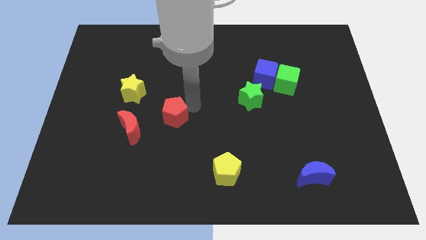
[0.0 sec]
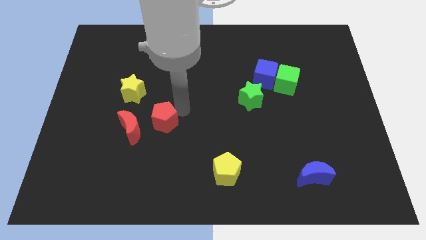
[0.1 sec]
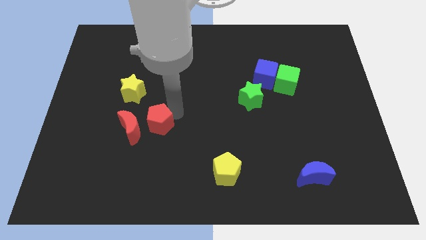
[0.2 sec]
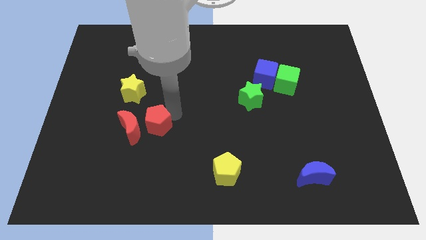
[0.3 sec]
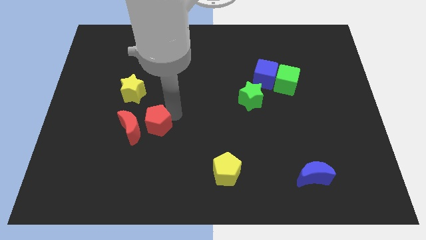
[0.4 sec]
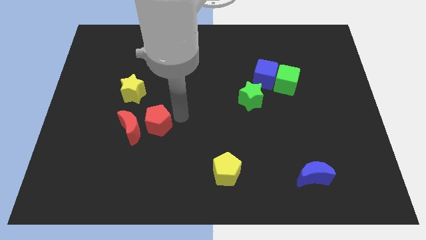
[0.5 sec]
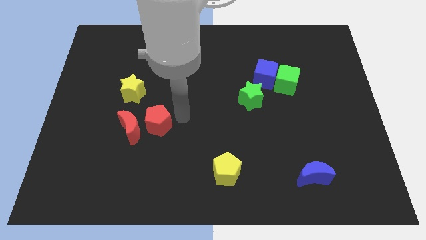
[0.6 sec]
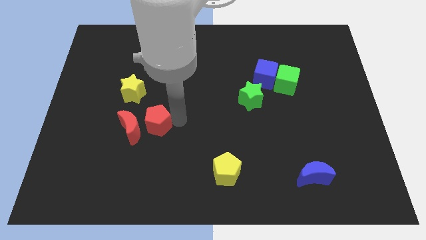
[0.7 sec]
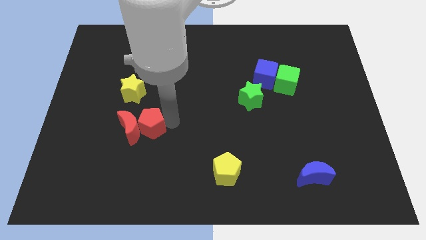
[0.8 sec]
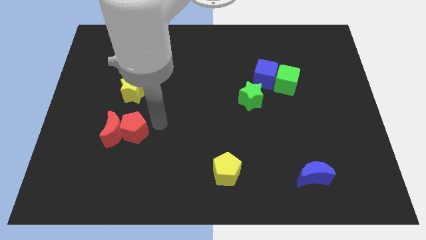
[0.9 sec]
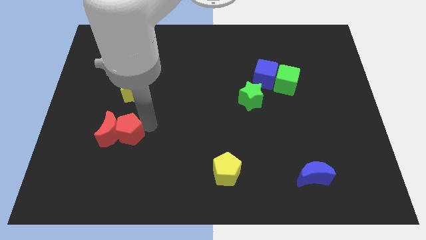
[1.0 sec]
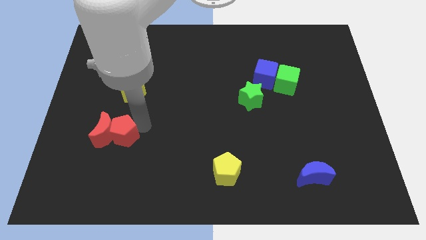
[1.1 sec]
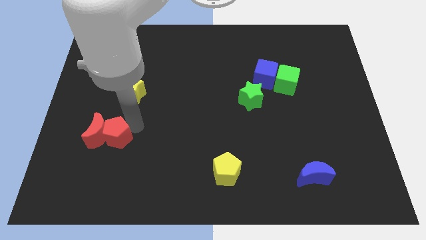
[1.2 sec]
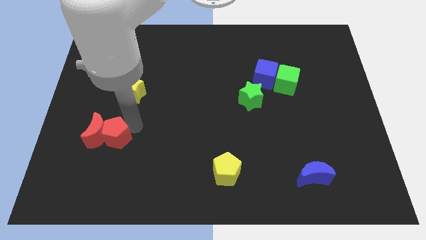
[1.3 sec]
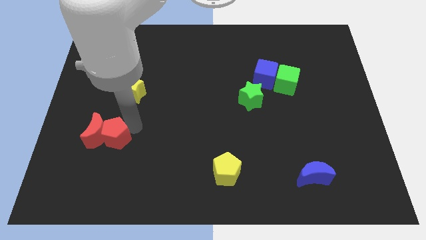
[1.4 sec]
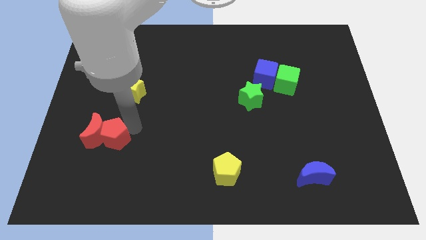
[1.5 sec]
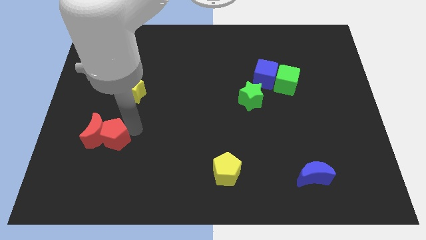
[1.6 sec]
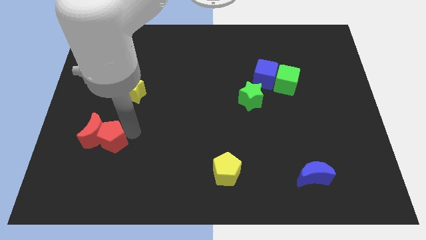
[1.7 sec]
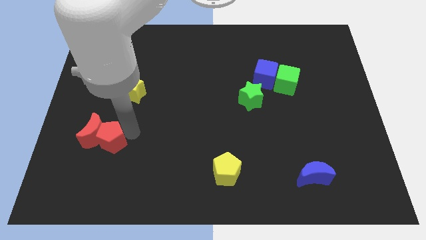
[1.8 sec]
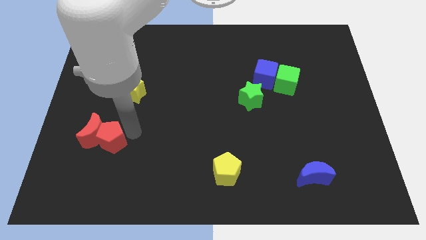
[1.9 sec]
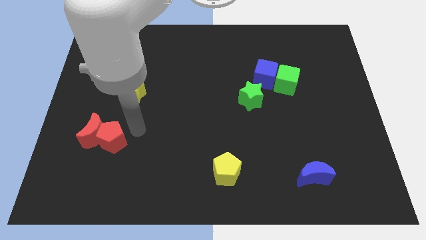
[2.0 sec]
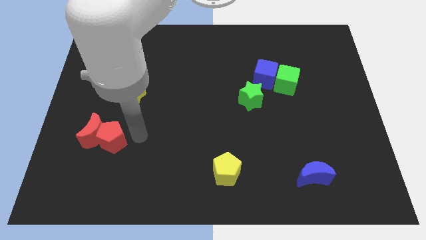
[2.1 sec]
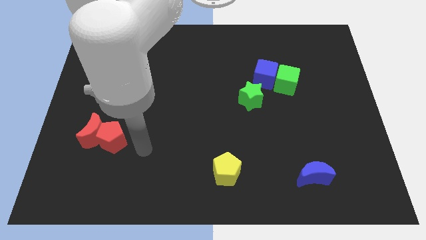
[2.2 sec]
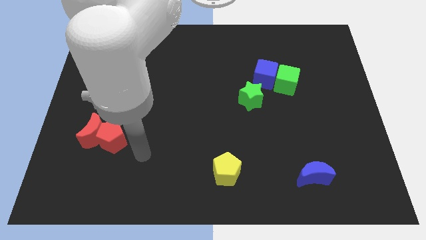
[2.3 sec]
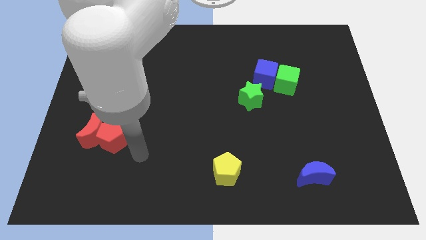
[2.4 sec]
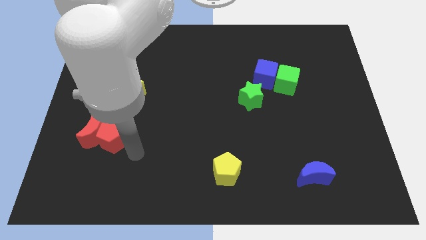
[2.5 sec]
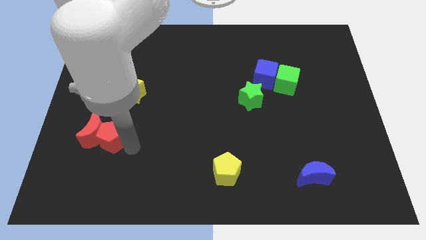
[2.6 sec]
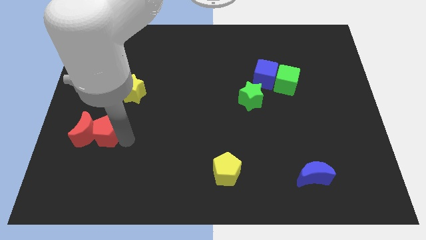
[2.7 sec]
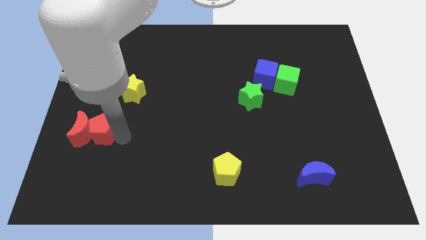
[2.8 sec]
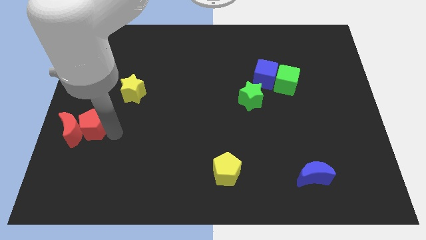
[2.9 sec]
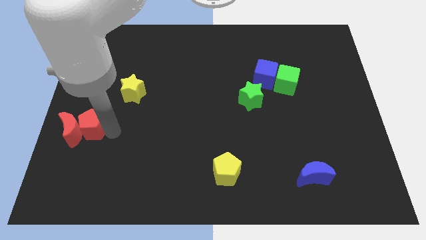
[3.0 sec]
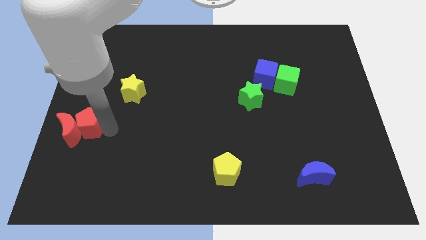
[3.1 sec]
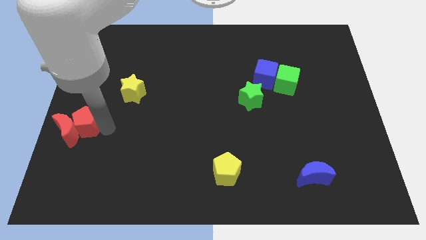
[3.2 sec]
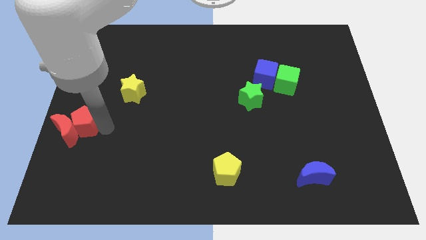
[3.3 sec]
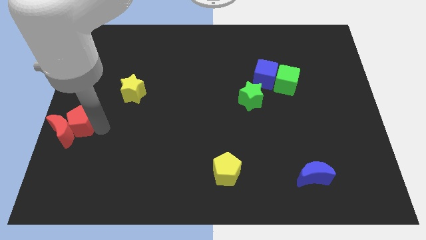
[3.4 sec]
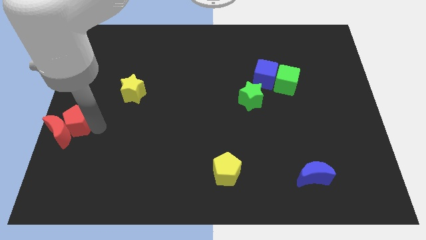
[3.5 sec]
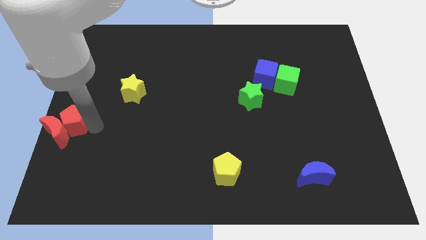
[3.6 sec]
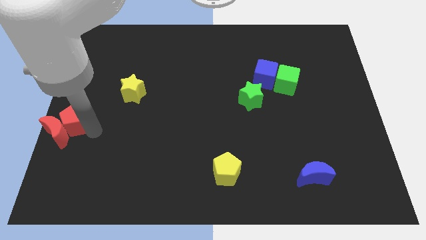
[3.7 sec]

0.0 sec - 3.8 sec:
move the red blocks to the left side of the board

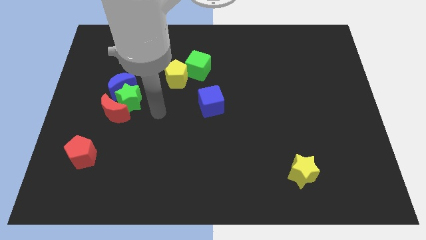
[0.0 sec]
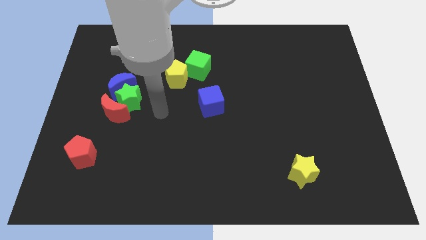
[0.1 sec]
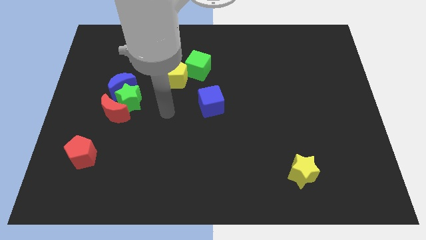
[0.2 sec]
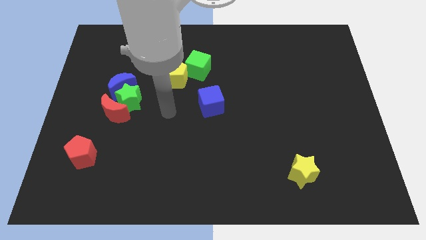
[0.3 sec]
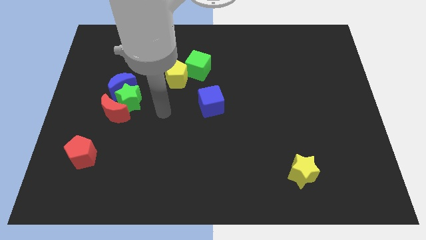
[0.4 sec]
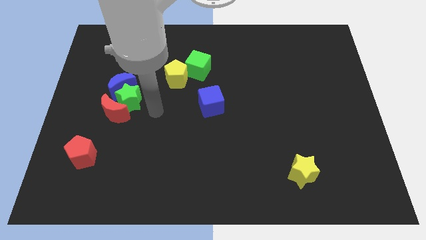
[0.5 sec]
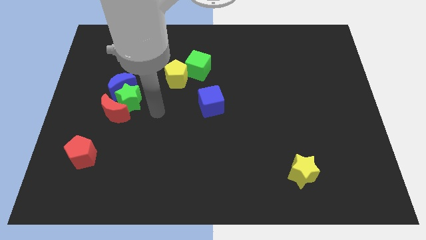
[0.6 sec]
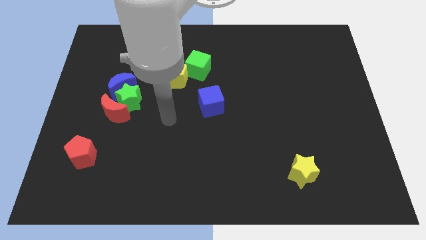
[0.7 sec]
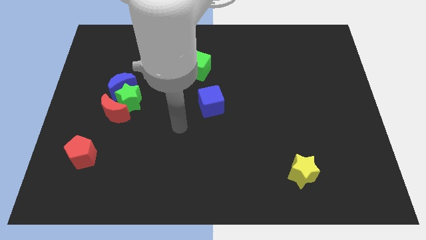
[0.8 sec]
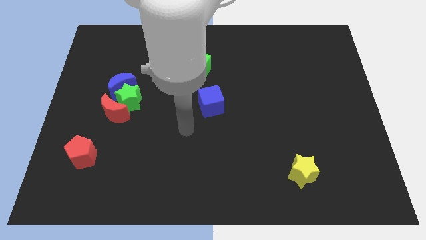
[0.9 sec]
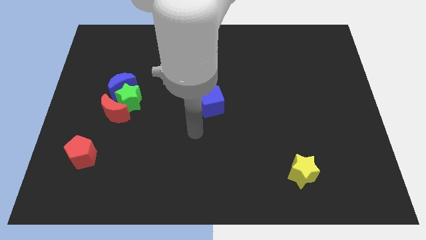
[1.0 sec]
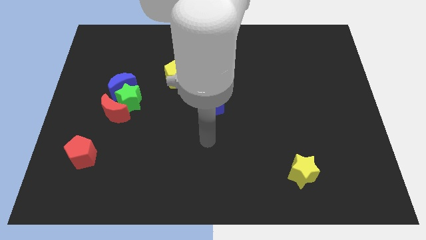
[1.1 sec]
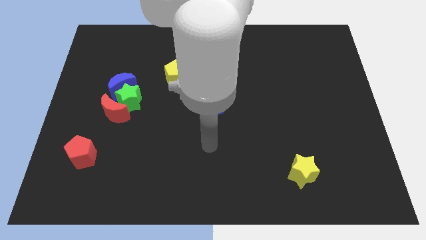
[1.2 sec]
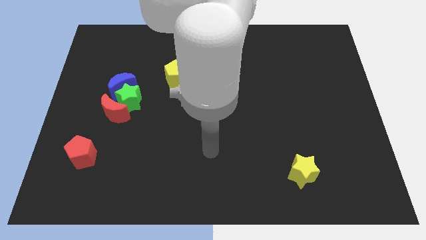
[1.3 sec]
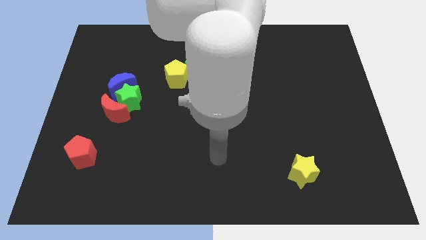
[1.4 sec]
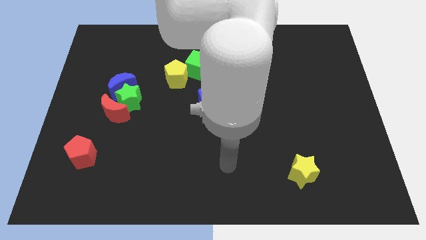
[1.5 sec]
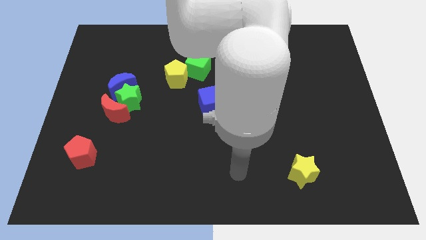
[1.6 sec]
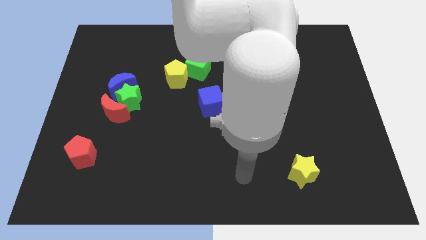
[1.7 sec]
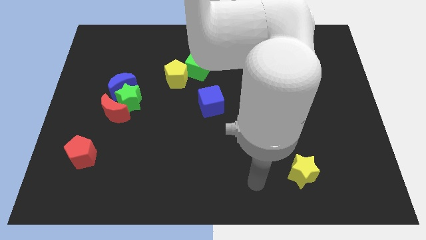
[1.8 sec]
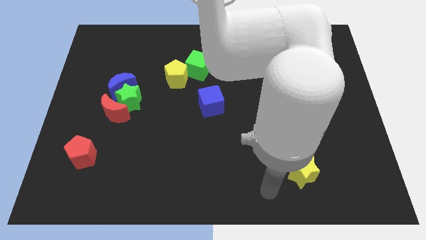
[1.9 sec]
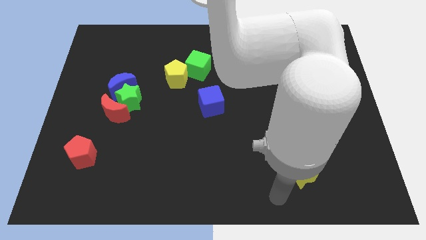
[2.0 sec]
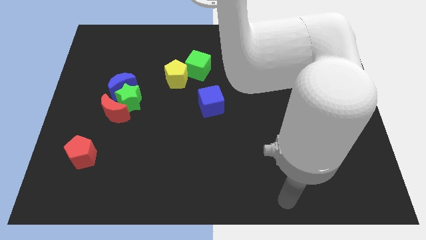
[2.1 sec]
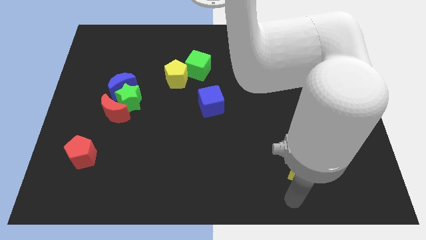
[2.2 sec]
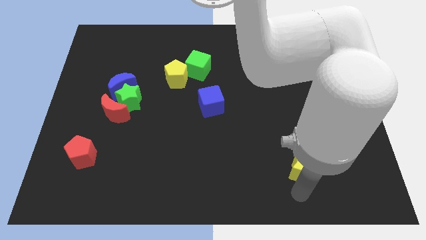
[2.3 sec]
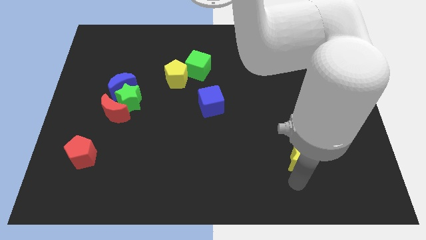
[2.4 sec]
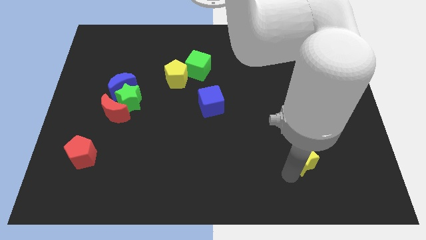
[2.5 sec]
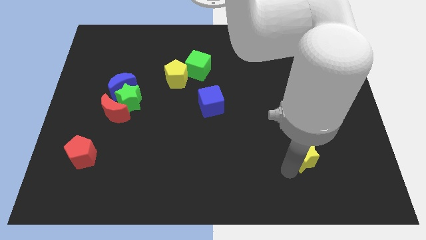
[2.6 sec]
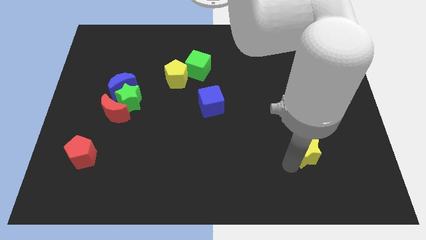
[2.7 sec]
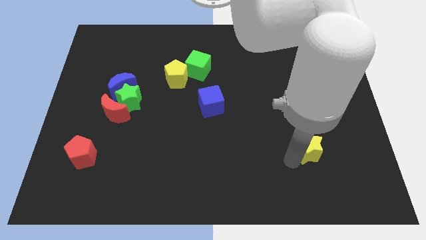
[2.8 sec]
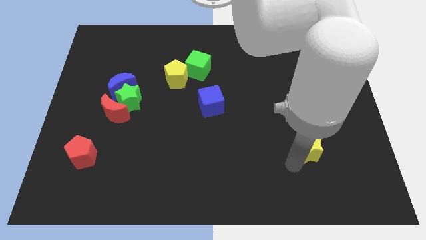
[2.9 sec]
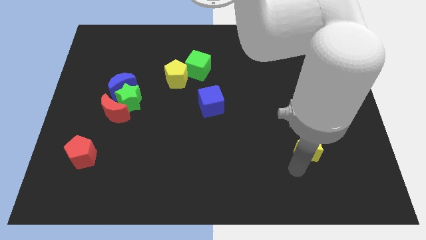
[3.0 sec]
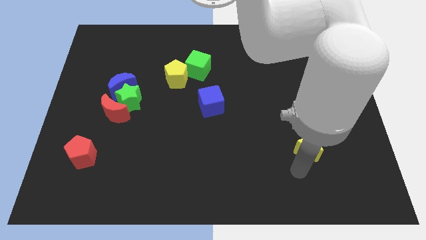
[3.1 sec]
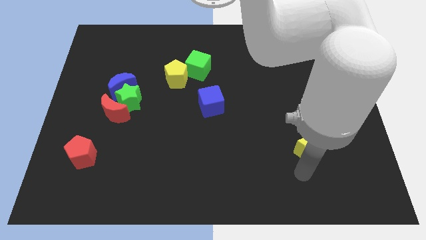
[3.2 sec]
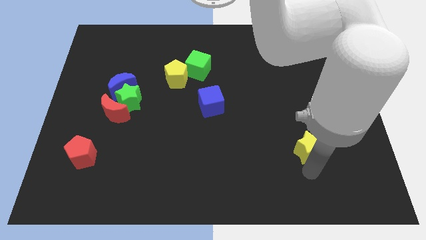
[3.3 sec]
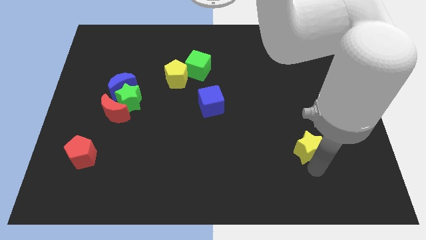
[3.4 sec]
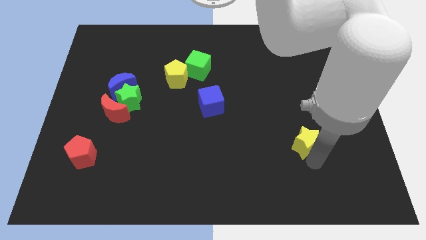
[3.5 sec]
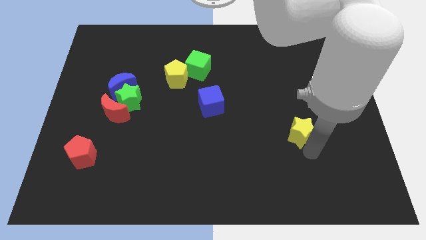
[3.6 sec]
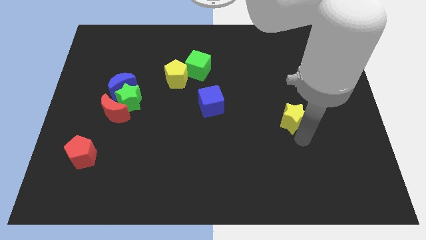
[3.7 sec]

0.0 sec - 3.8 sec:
move the yellow star diagonally to green cube

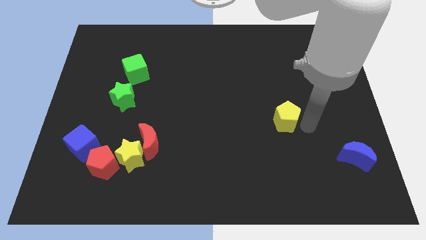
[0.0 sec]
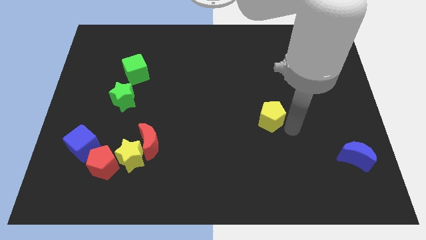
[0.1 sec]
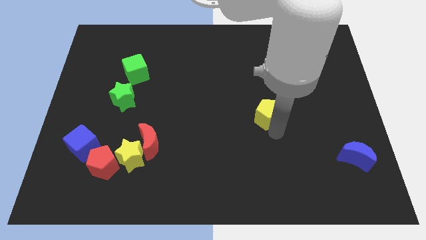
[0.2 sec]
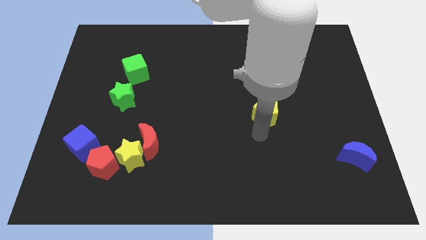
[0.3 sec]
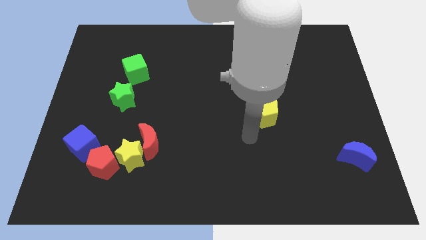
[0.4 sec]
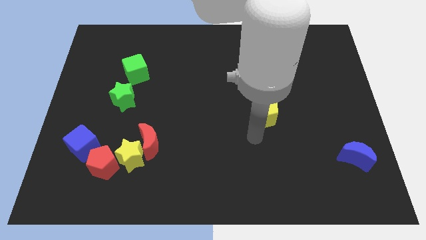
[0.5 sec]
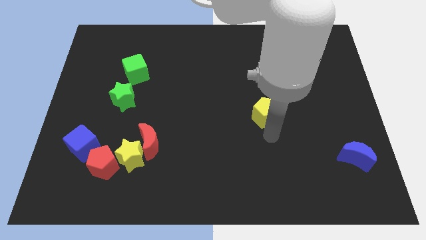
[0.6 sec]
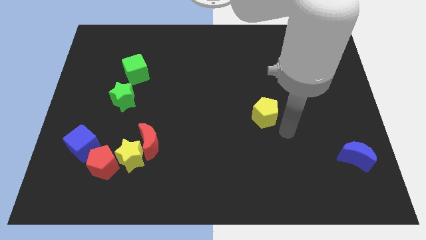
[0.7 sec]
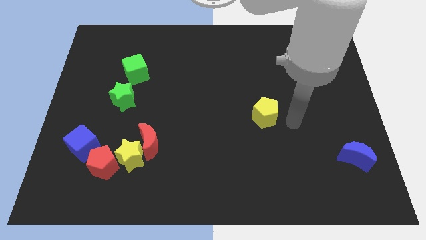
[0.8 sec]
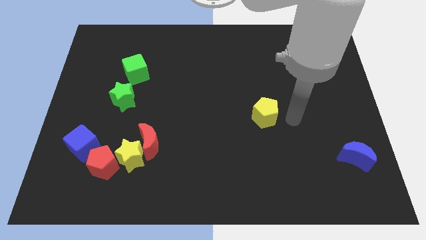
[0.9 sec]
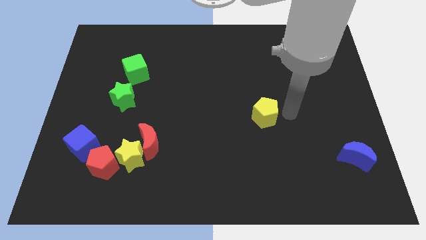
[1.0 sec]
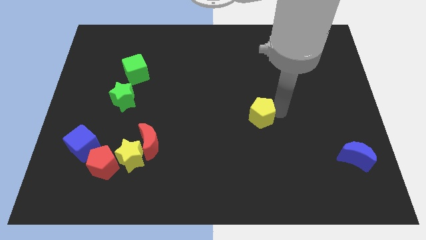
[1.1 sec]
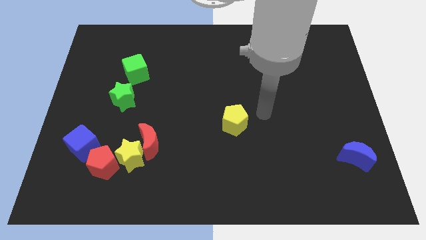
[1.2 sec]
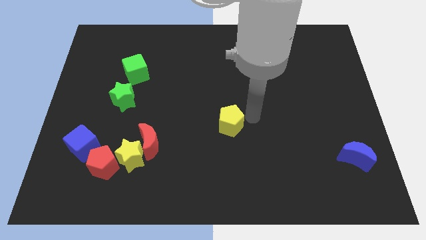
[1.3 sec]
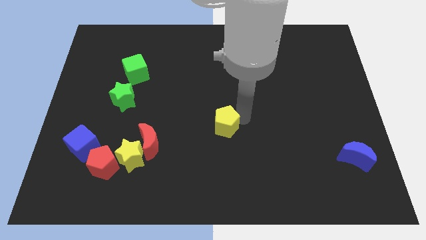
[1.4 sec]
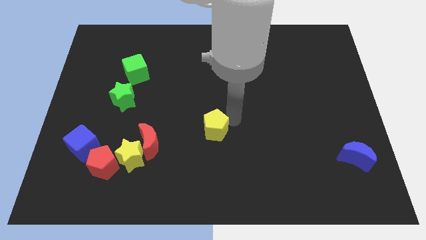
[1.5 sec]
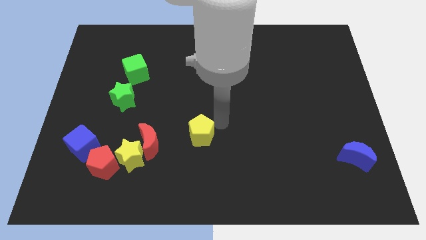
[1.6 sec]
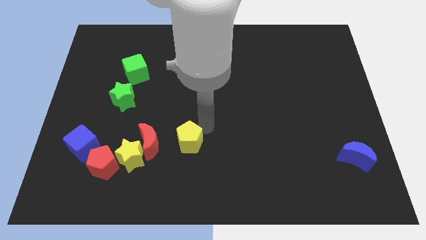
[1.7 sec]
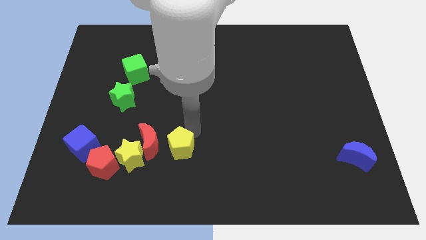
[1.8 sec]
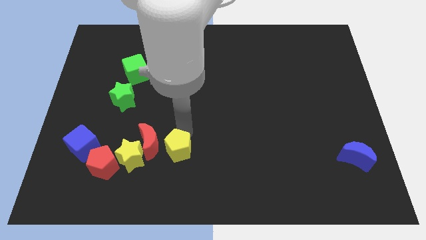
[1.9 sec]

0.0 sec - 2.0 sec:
place yellow pentagon right to the red moon
